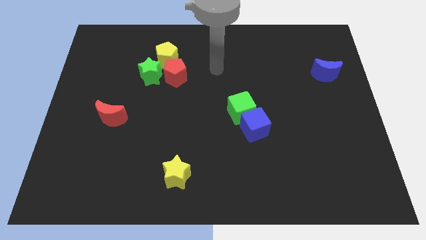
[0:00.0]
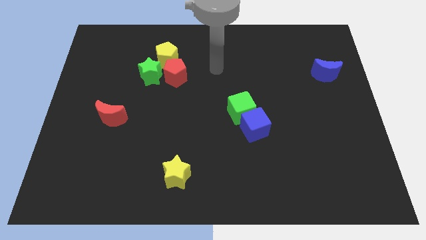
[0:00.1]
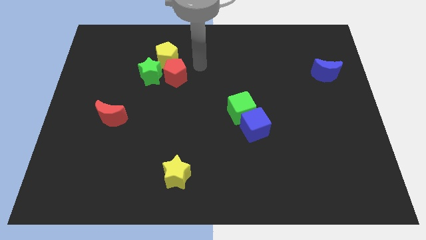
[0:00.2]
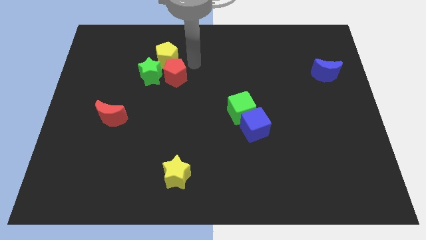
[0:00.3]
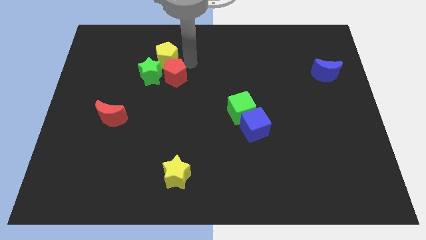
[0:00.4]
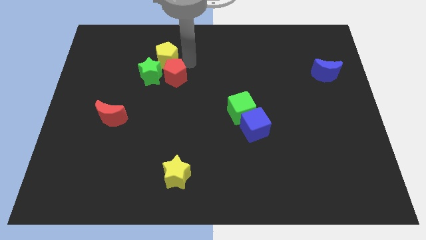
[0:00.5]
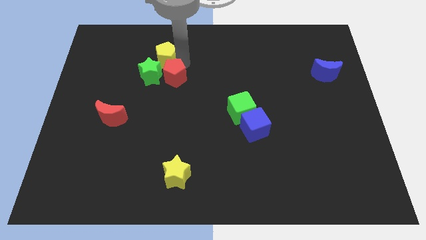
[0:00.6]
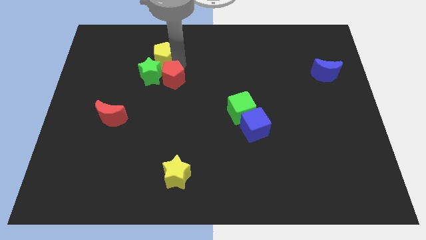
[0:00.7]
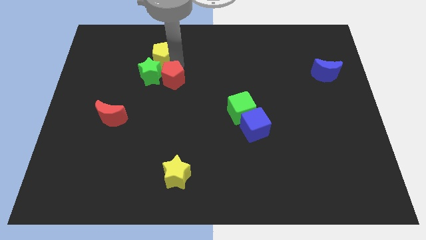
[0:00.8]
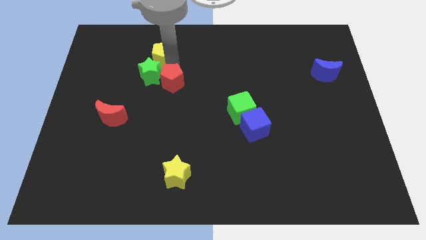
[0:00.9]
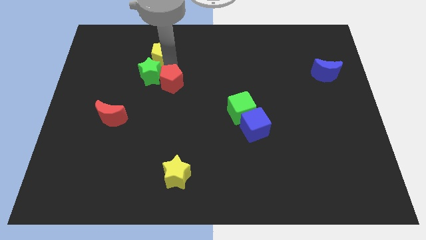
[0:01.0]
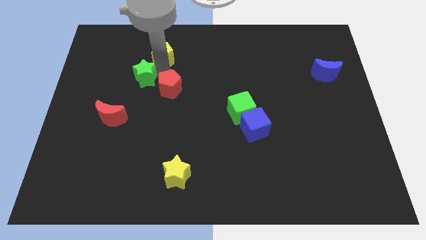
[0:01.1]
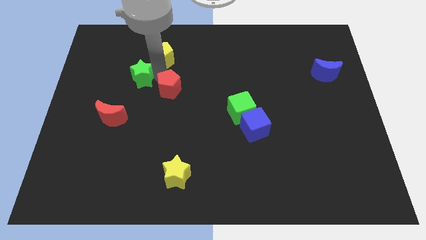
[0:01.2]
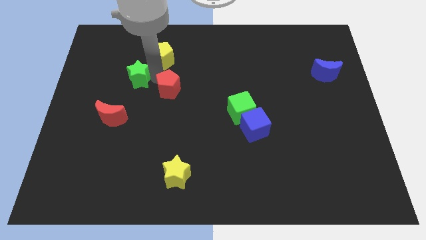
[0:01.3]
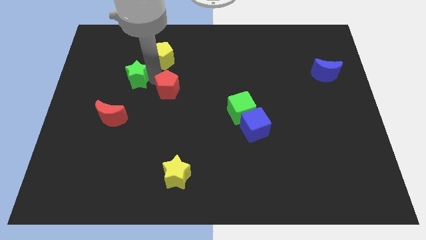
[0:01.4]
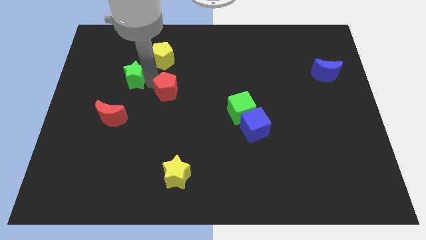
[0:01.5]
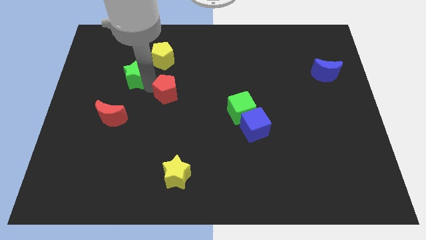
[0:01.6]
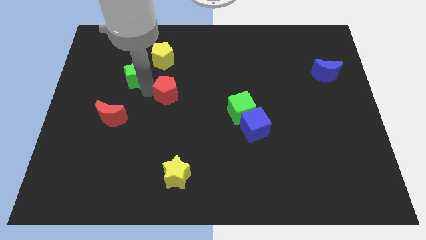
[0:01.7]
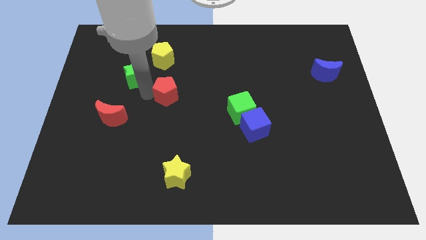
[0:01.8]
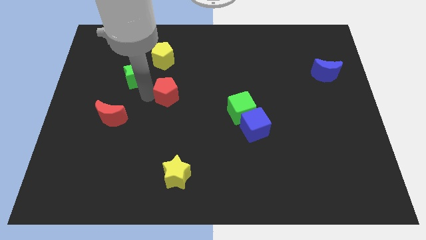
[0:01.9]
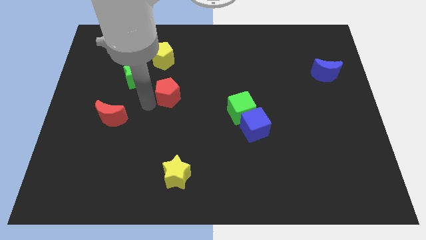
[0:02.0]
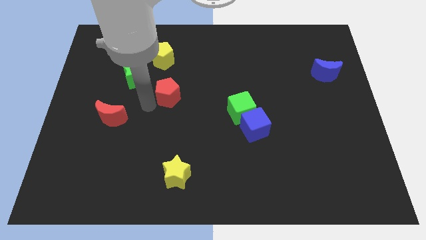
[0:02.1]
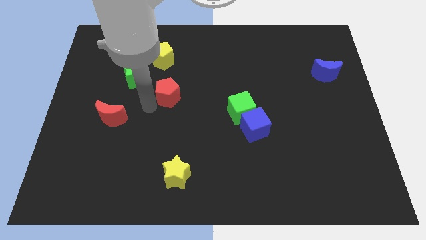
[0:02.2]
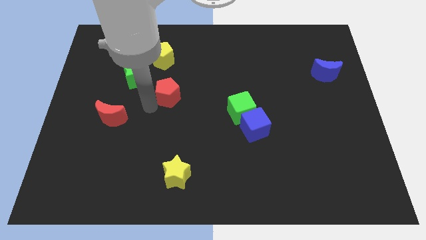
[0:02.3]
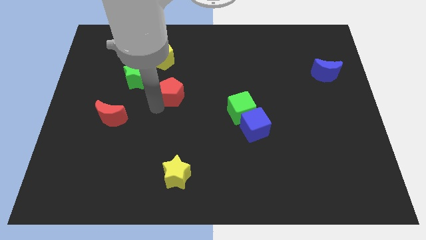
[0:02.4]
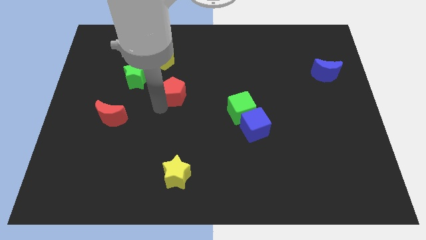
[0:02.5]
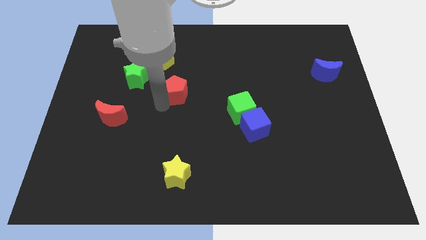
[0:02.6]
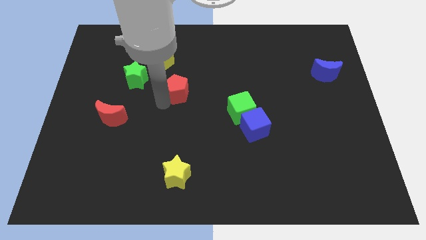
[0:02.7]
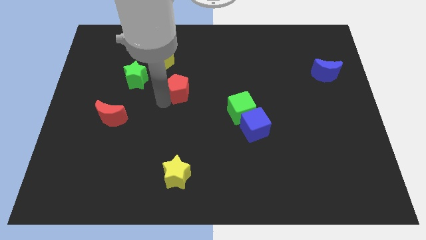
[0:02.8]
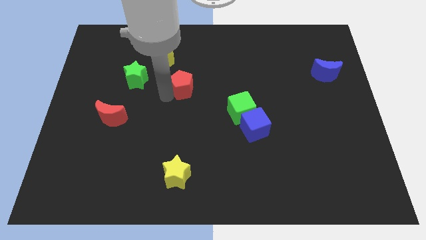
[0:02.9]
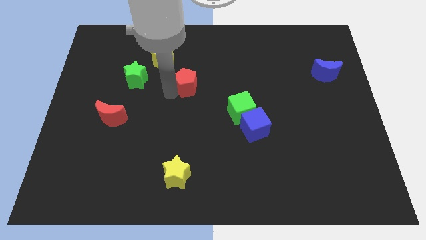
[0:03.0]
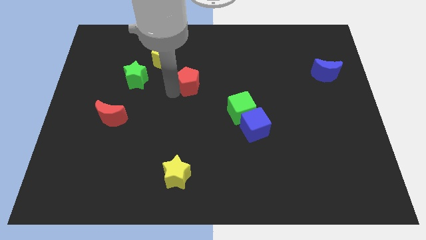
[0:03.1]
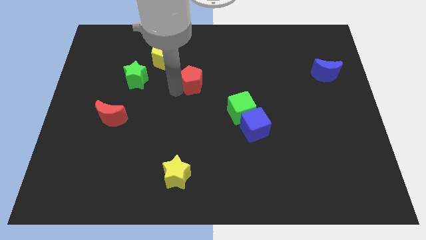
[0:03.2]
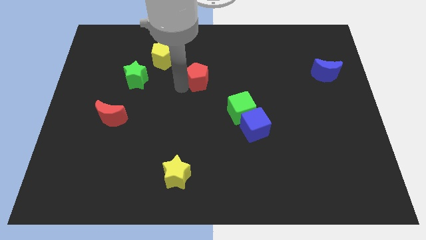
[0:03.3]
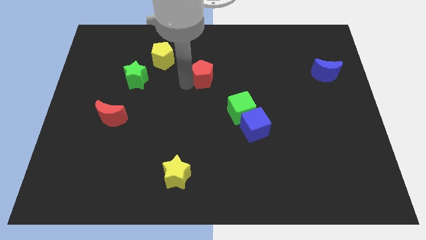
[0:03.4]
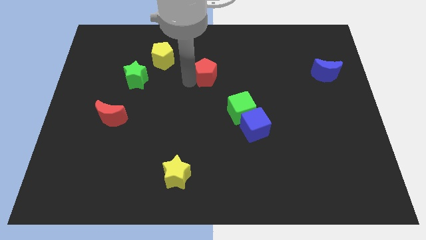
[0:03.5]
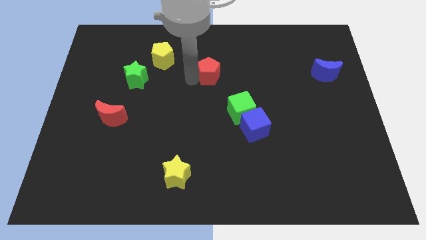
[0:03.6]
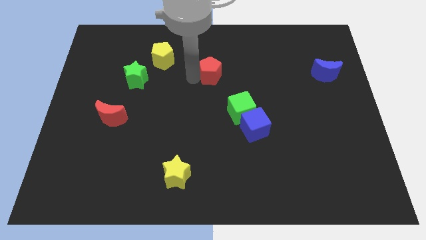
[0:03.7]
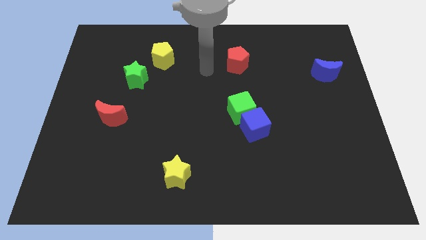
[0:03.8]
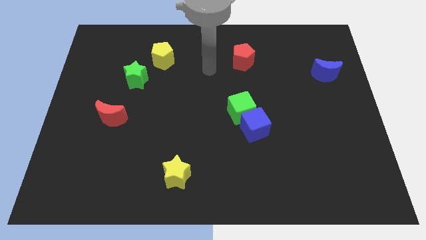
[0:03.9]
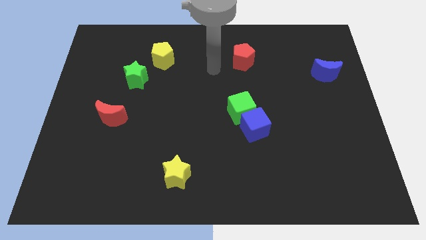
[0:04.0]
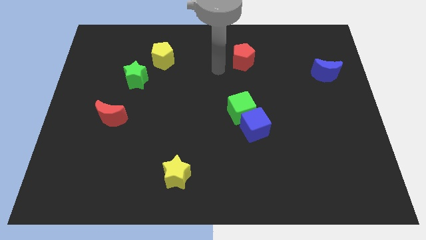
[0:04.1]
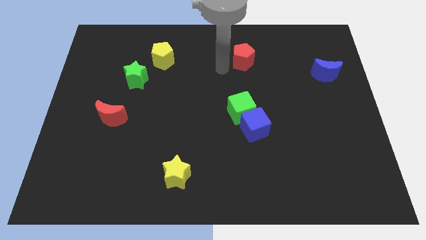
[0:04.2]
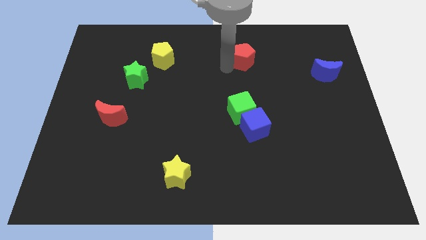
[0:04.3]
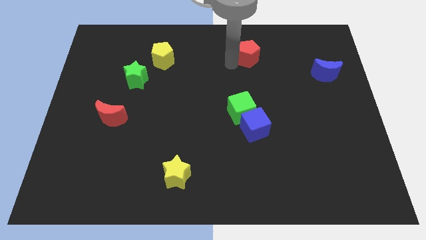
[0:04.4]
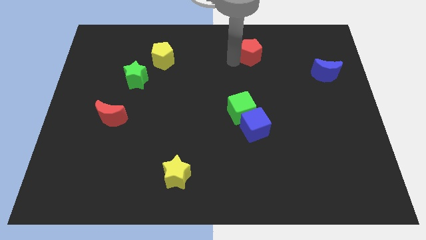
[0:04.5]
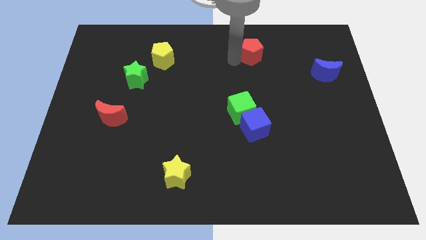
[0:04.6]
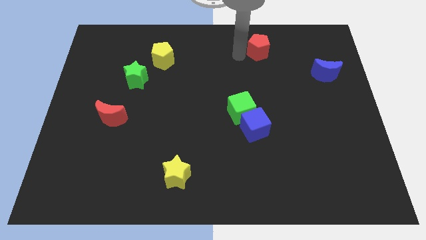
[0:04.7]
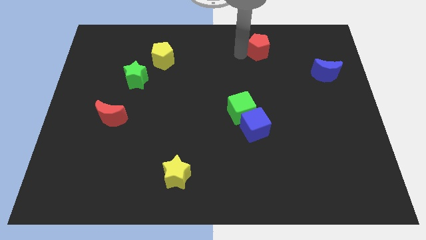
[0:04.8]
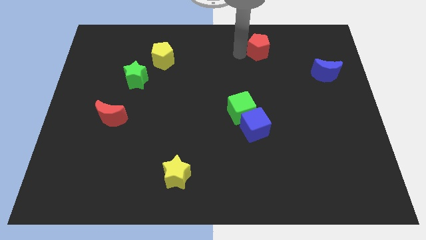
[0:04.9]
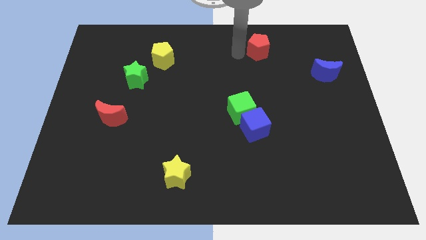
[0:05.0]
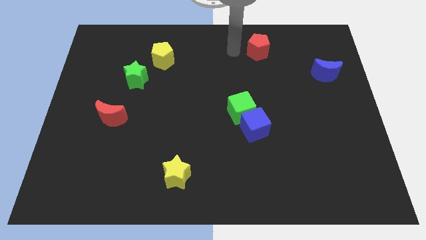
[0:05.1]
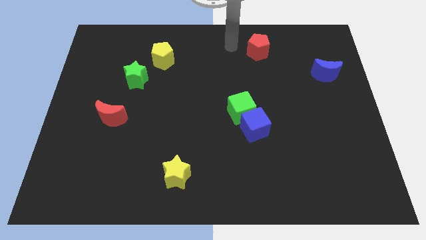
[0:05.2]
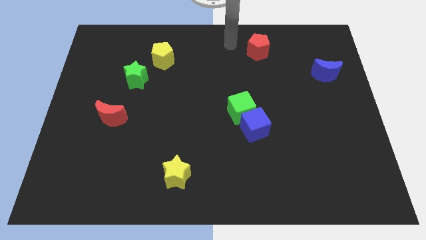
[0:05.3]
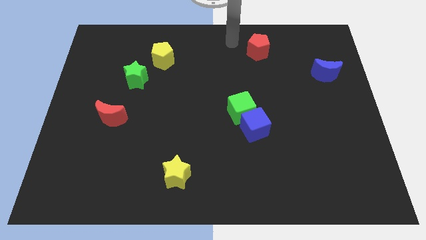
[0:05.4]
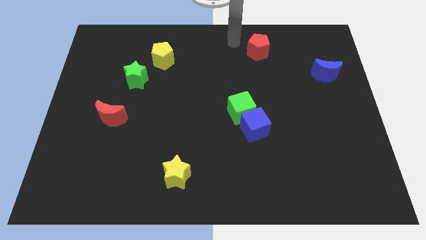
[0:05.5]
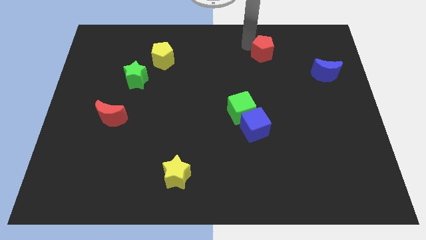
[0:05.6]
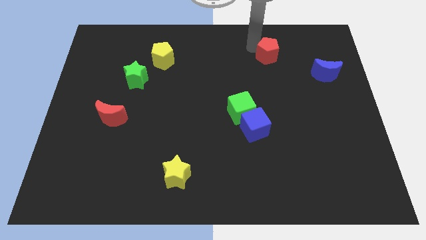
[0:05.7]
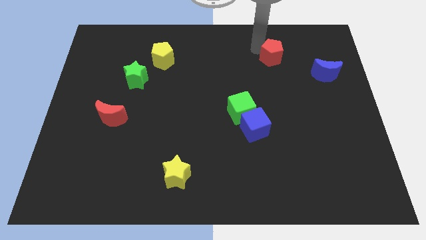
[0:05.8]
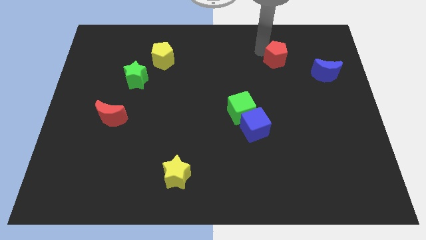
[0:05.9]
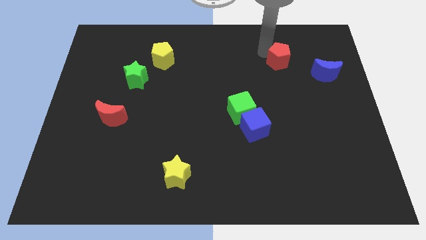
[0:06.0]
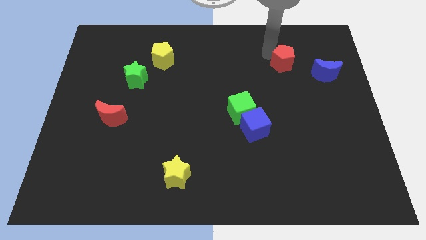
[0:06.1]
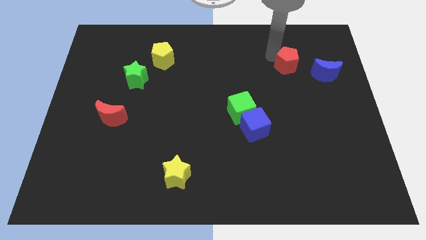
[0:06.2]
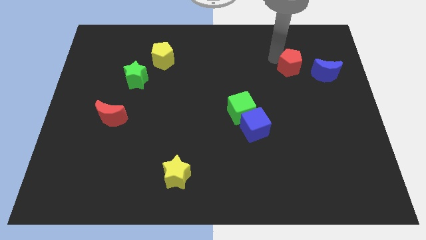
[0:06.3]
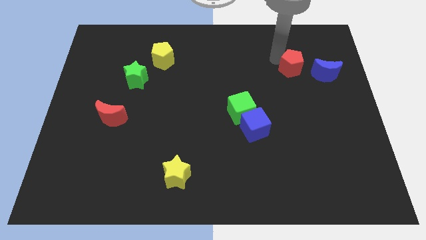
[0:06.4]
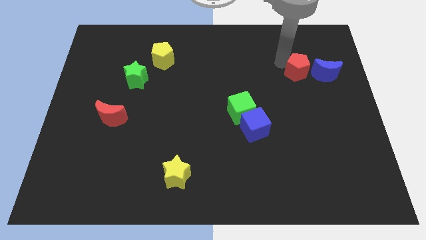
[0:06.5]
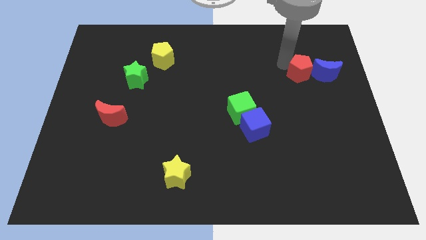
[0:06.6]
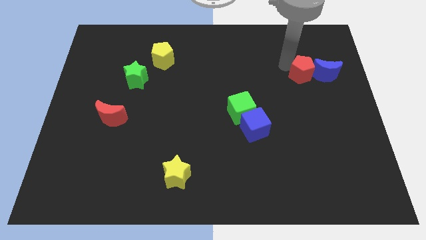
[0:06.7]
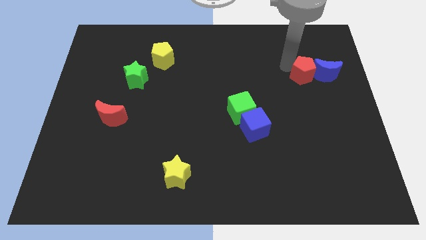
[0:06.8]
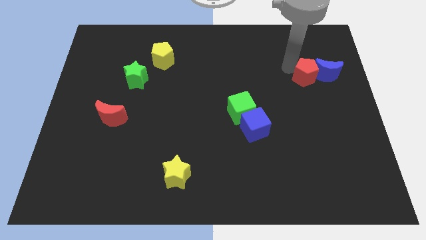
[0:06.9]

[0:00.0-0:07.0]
move the red pentagon to the blue moon

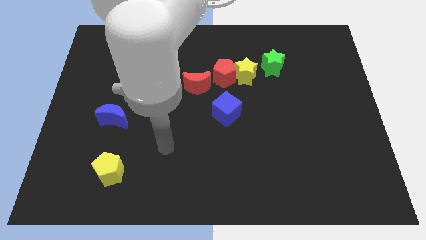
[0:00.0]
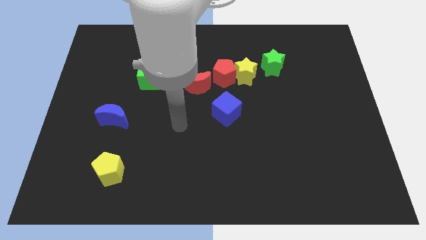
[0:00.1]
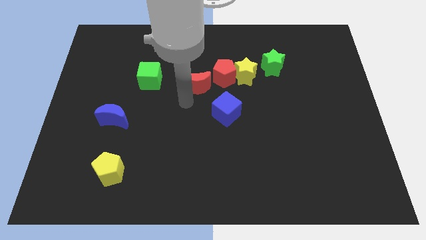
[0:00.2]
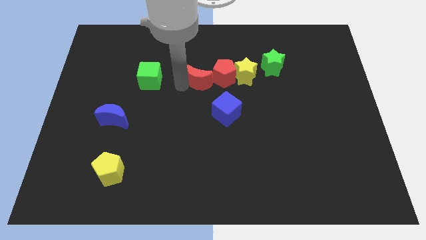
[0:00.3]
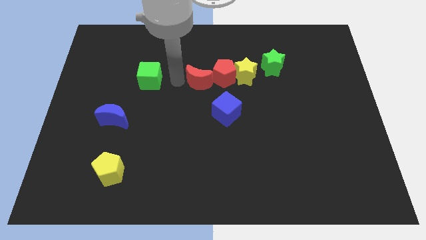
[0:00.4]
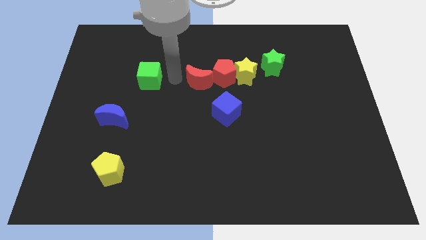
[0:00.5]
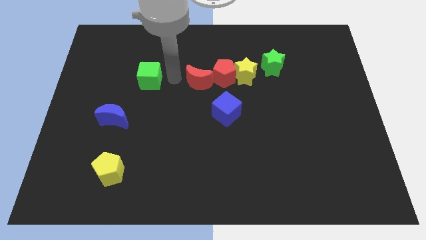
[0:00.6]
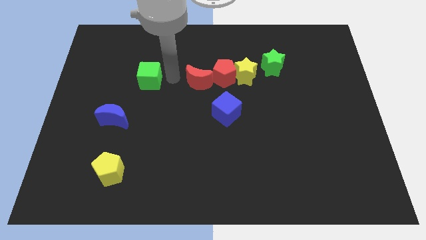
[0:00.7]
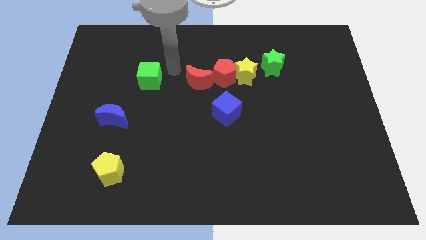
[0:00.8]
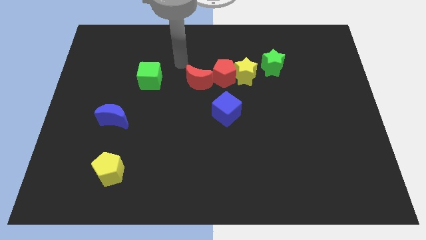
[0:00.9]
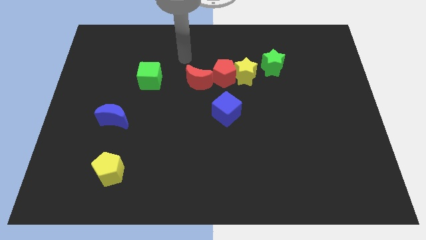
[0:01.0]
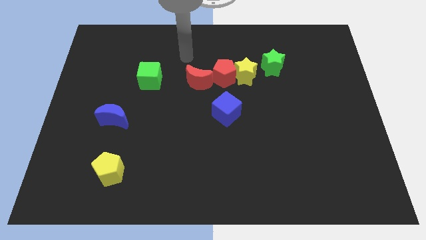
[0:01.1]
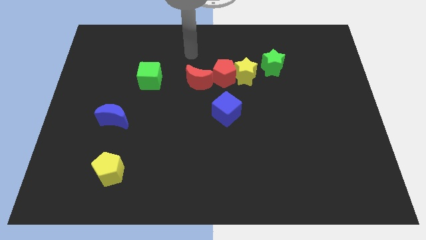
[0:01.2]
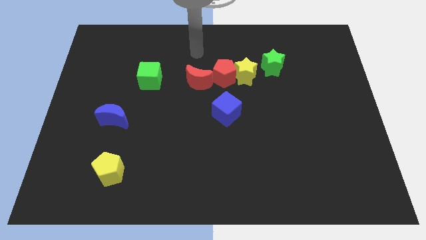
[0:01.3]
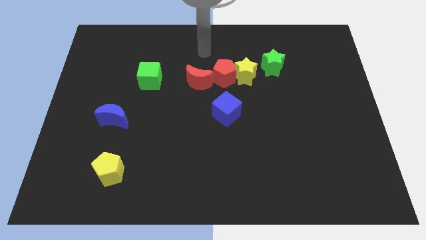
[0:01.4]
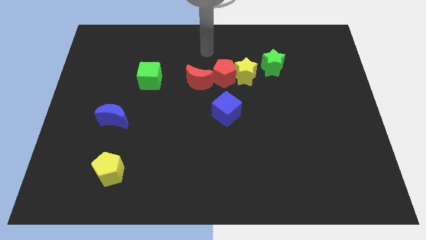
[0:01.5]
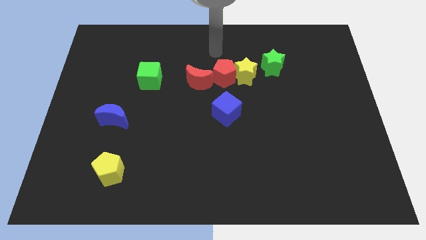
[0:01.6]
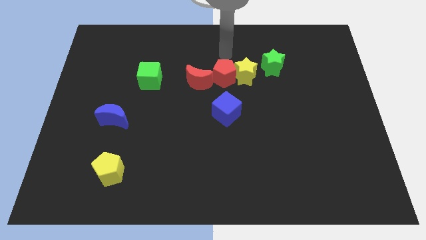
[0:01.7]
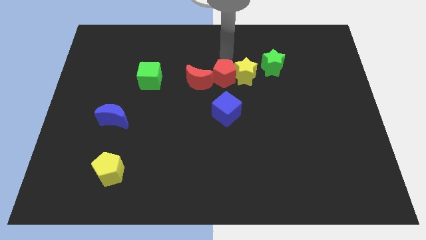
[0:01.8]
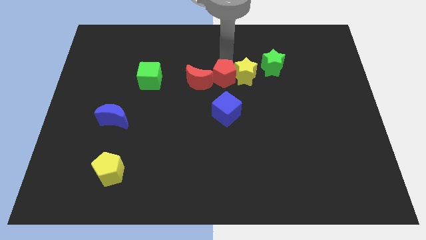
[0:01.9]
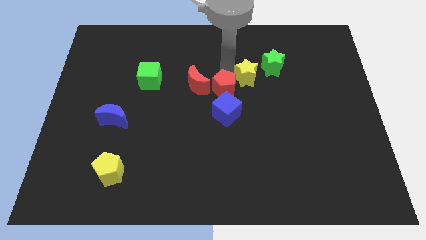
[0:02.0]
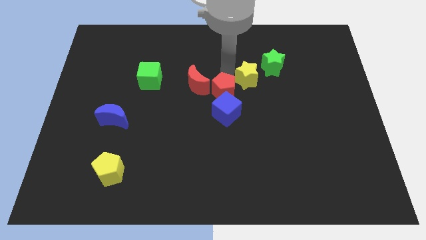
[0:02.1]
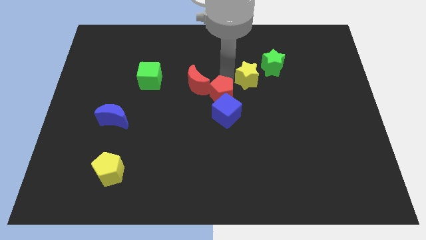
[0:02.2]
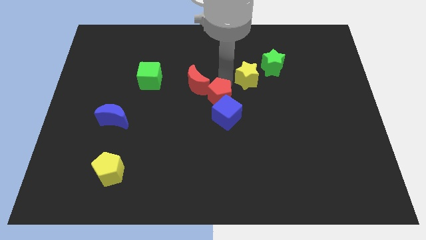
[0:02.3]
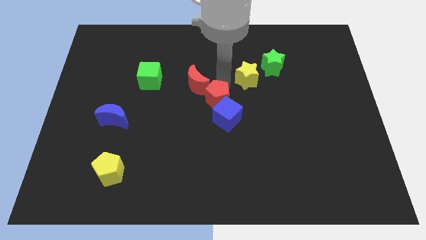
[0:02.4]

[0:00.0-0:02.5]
push the red pentagon next to the blue cube
